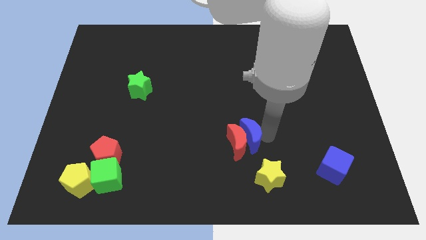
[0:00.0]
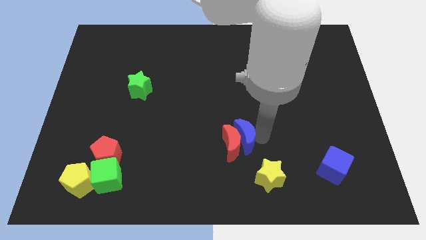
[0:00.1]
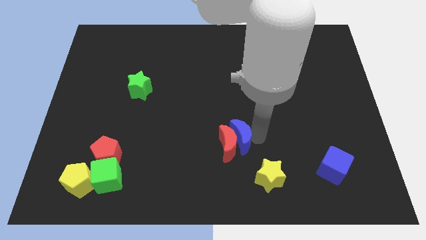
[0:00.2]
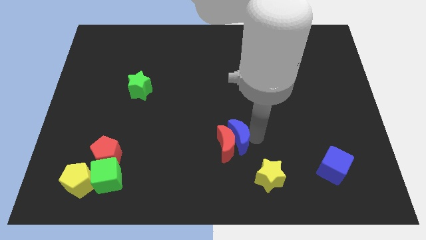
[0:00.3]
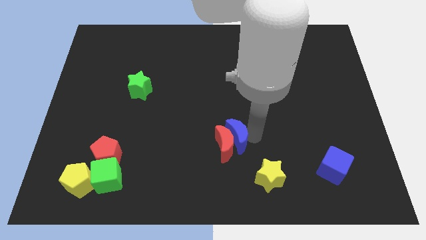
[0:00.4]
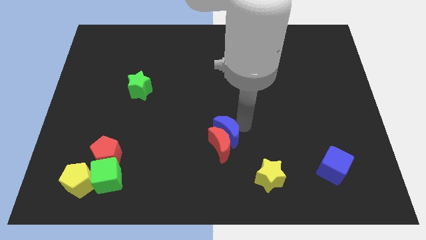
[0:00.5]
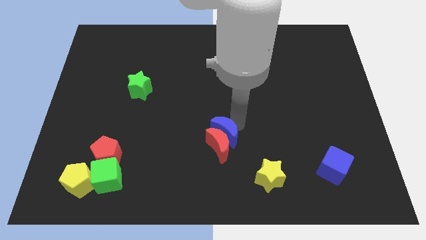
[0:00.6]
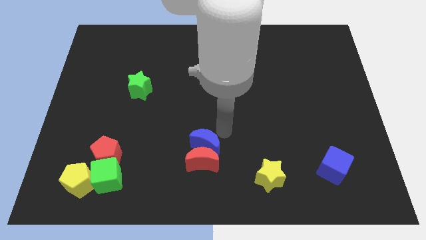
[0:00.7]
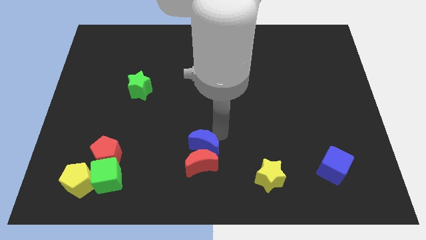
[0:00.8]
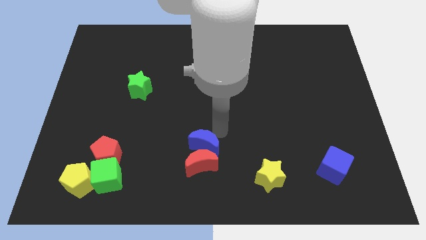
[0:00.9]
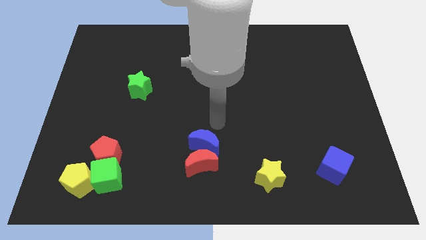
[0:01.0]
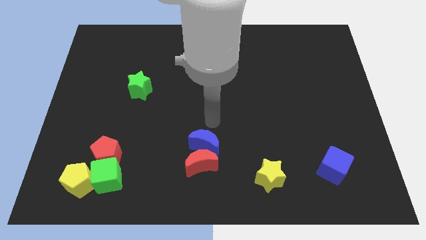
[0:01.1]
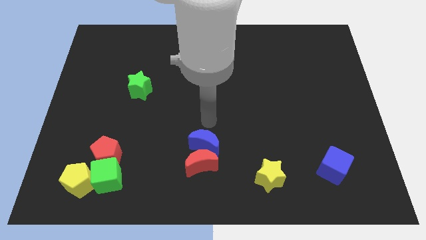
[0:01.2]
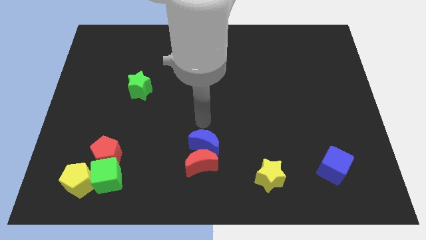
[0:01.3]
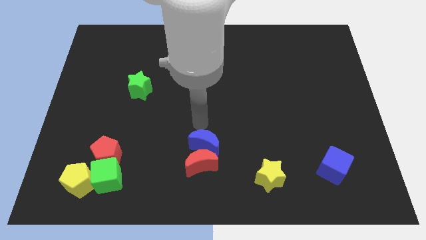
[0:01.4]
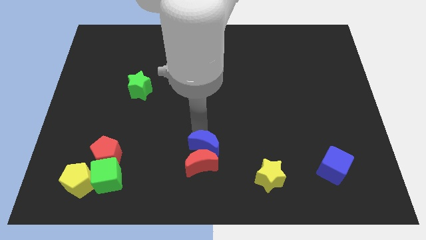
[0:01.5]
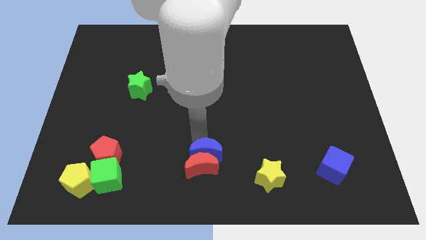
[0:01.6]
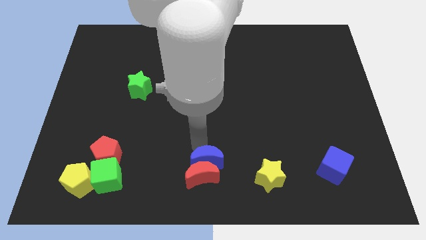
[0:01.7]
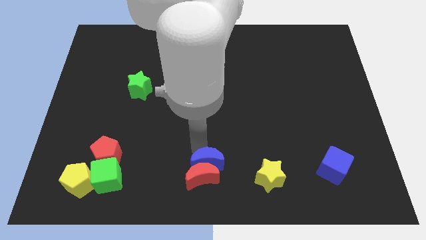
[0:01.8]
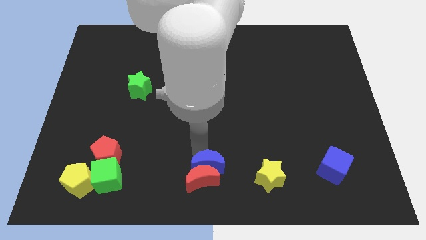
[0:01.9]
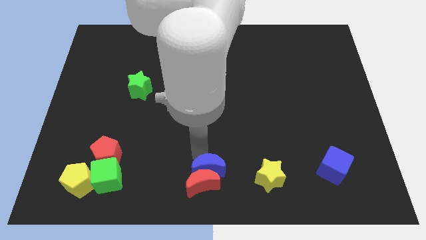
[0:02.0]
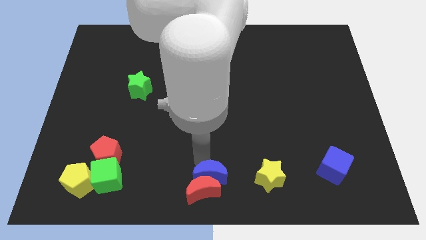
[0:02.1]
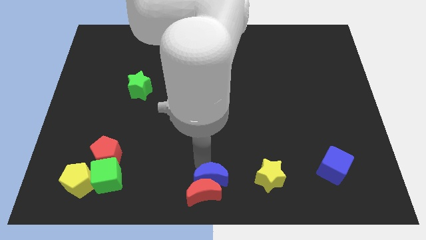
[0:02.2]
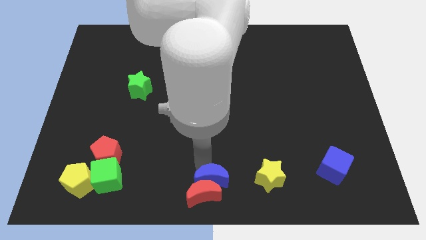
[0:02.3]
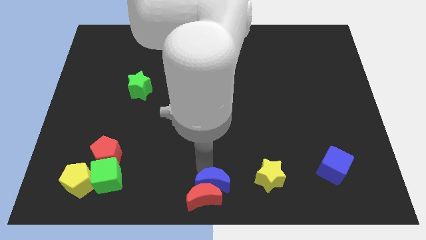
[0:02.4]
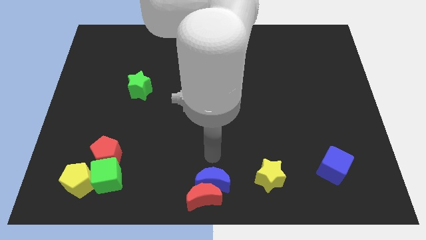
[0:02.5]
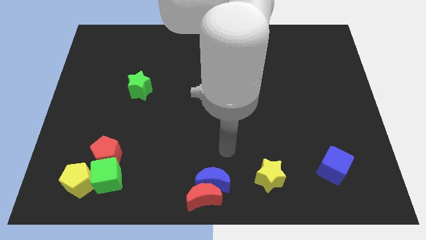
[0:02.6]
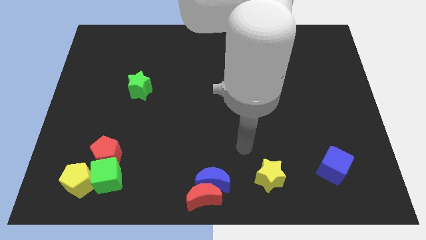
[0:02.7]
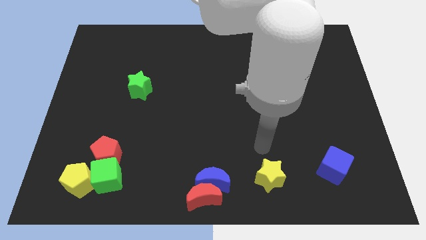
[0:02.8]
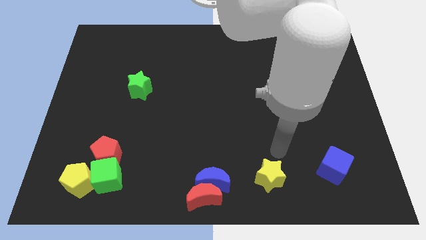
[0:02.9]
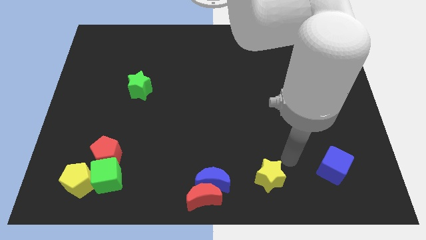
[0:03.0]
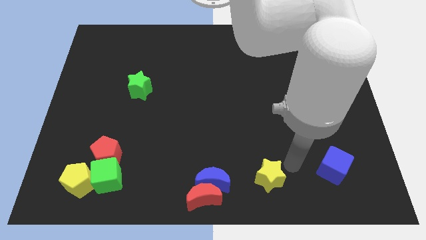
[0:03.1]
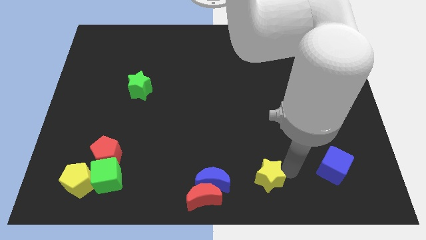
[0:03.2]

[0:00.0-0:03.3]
move the red moon to the bottom center of the board

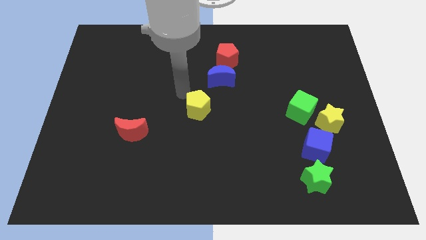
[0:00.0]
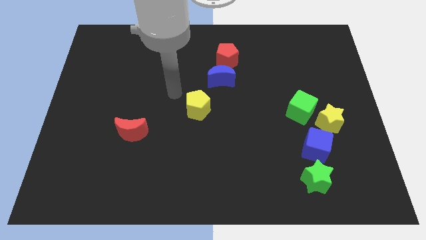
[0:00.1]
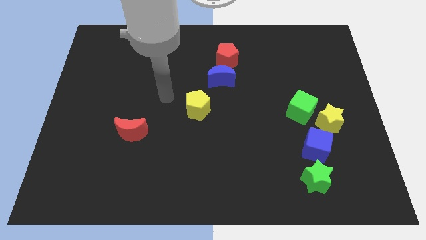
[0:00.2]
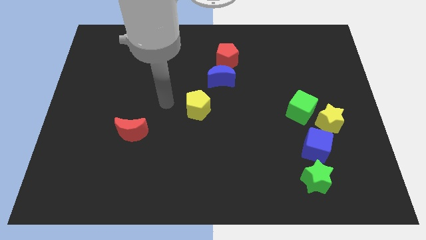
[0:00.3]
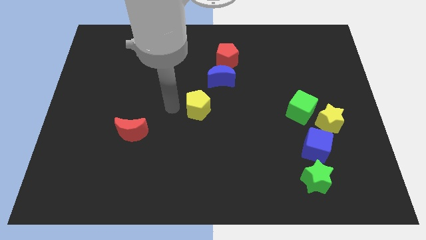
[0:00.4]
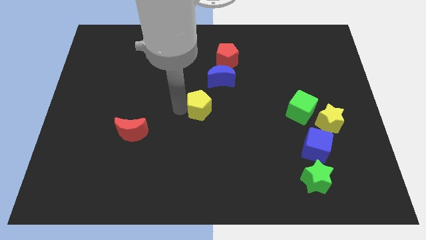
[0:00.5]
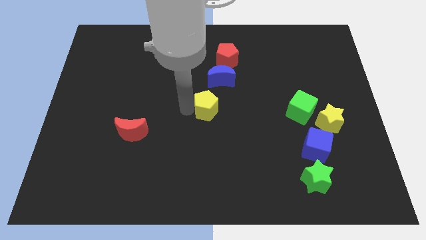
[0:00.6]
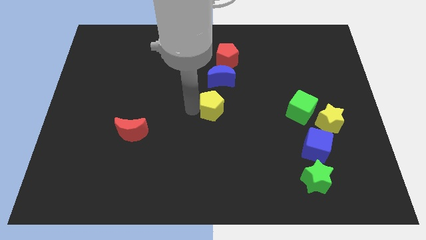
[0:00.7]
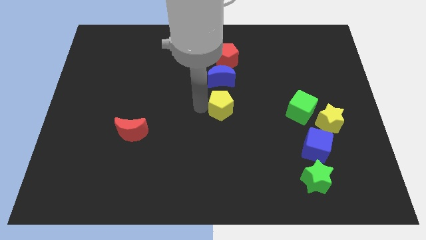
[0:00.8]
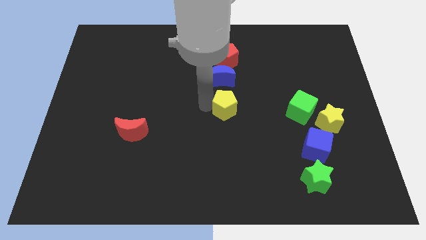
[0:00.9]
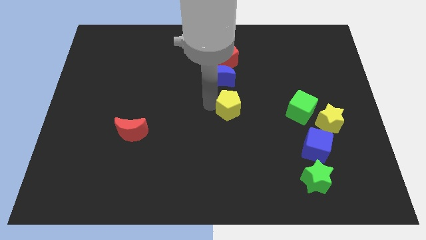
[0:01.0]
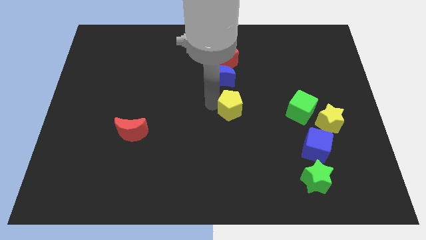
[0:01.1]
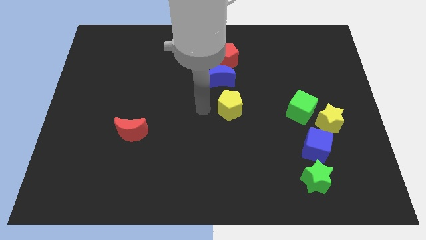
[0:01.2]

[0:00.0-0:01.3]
push the yellow pentagon slightly to the right

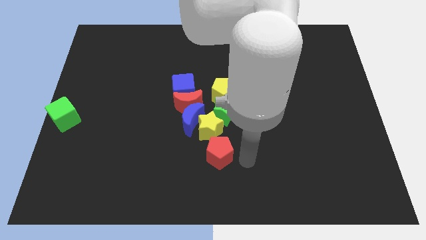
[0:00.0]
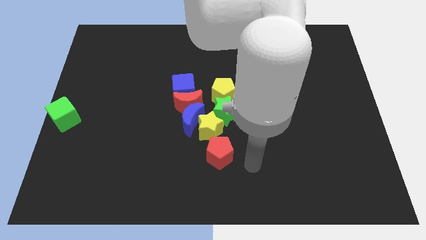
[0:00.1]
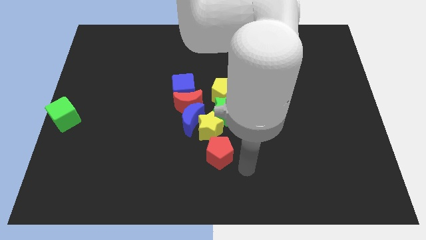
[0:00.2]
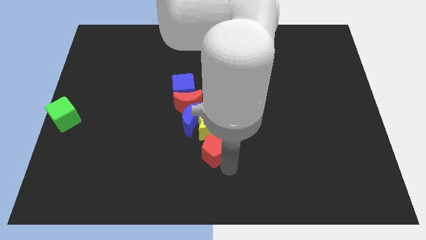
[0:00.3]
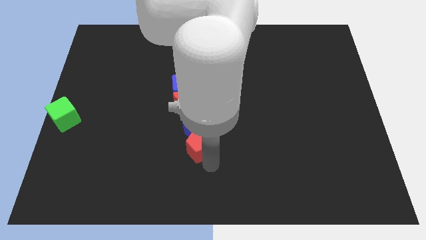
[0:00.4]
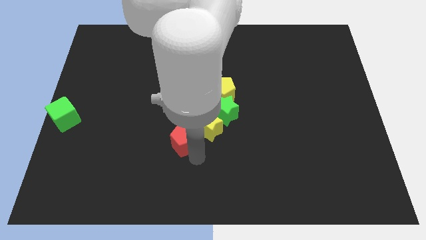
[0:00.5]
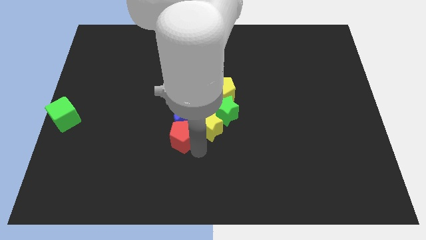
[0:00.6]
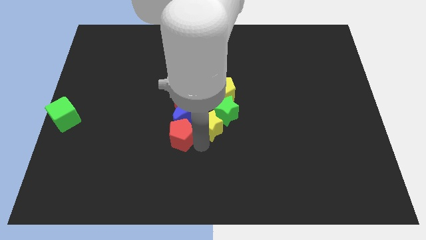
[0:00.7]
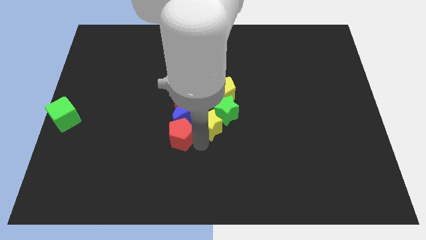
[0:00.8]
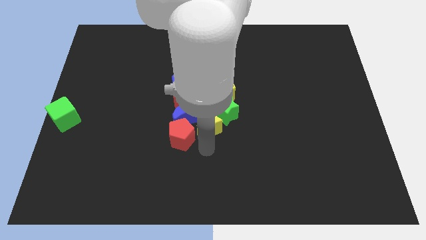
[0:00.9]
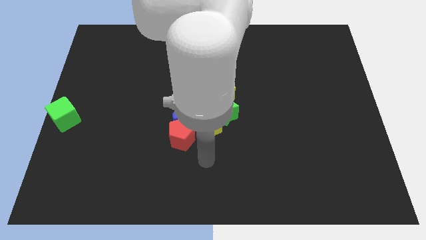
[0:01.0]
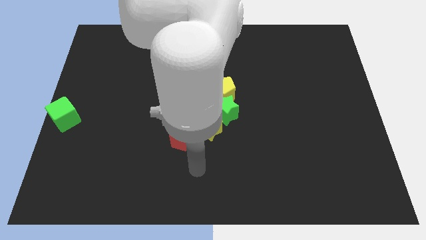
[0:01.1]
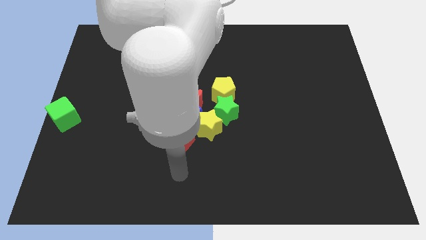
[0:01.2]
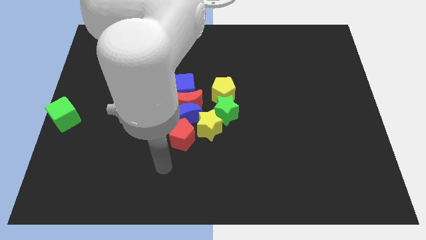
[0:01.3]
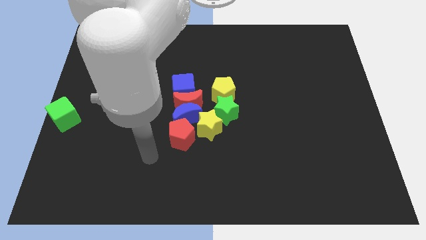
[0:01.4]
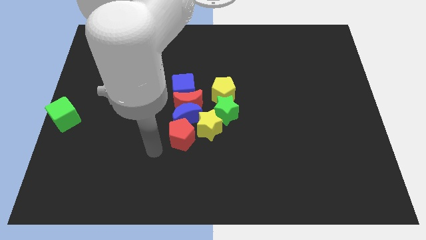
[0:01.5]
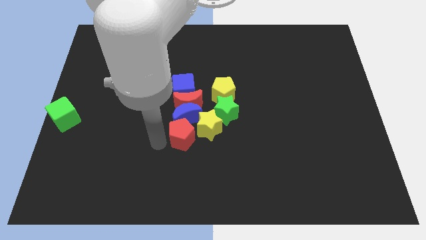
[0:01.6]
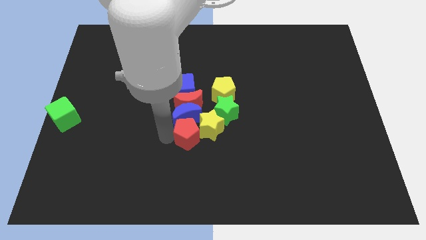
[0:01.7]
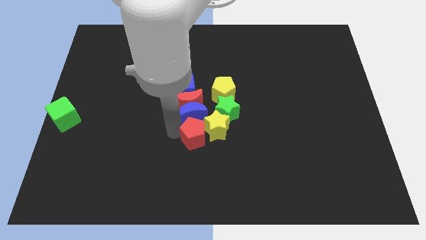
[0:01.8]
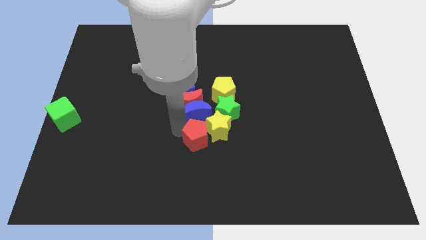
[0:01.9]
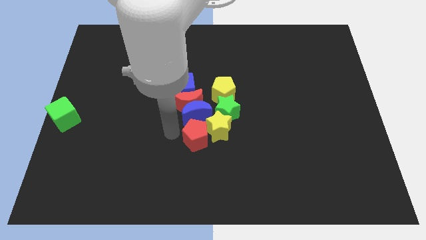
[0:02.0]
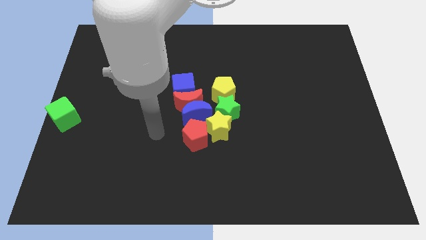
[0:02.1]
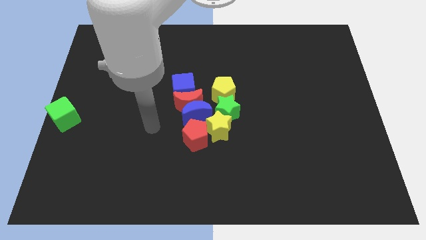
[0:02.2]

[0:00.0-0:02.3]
adjust the red pentagon into the group of blocks

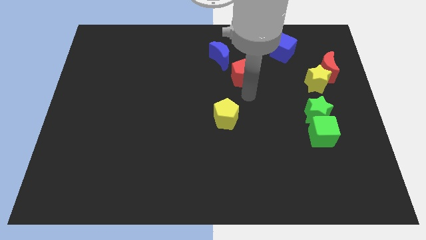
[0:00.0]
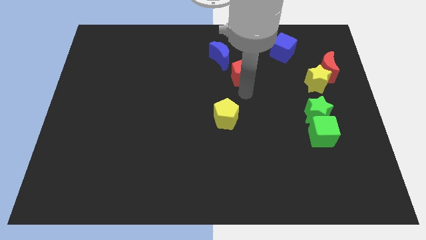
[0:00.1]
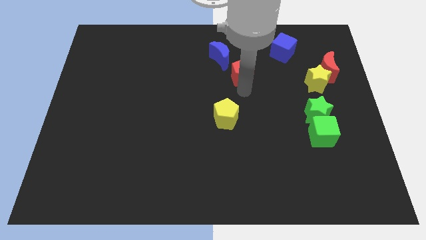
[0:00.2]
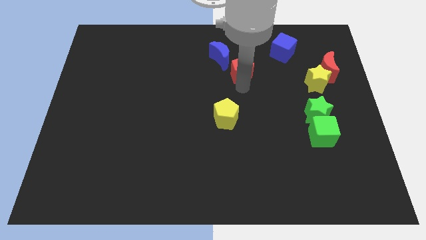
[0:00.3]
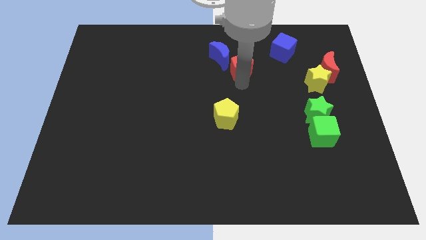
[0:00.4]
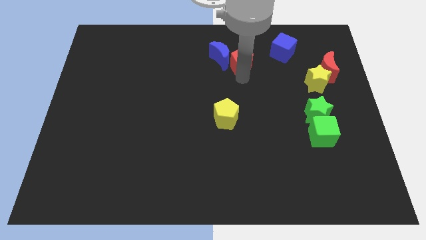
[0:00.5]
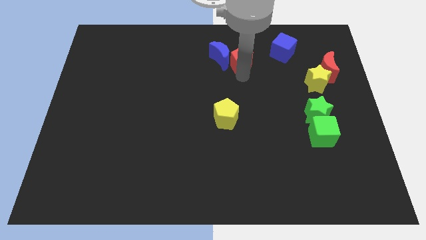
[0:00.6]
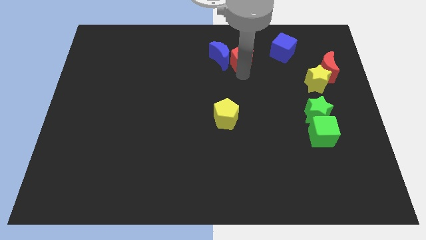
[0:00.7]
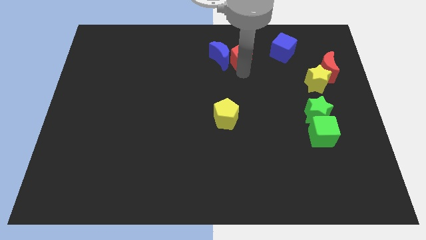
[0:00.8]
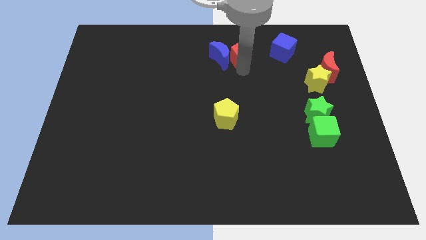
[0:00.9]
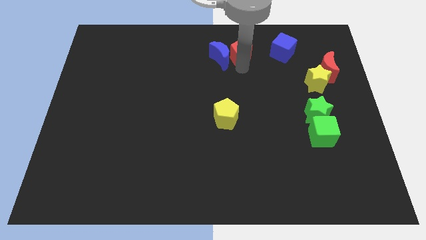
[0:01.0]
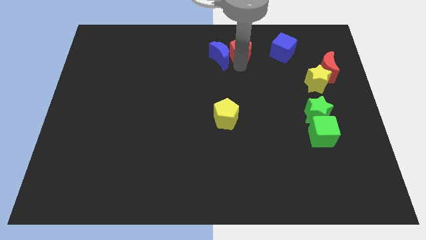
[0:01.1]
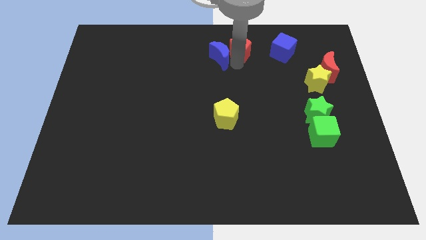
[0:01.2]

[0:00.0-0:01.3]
push the red pentagon to the right of the blue crescent

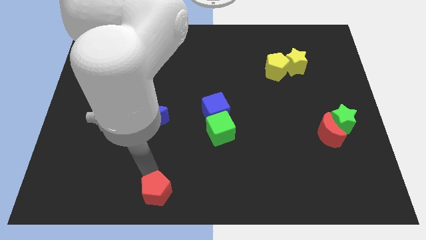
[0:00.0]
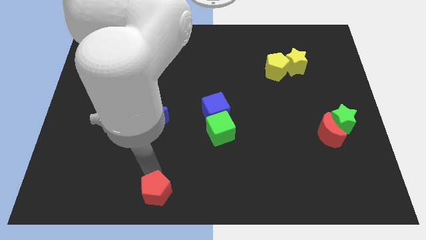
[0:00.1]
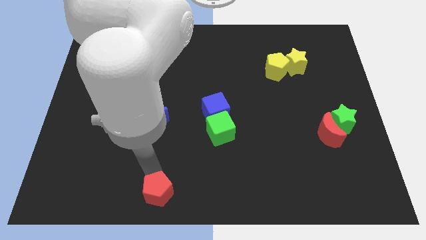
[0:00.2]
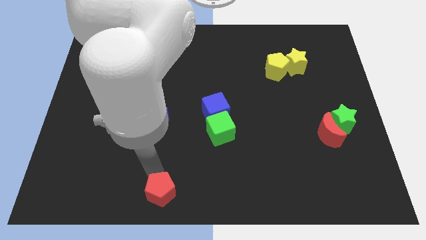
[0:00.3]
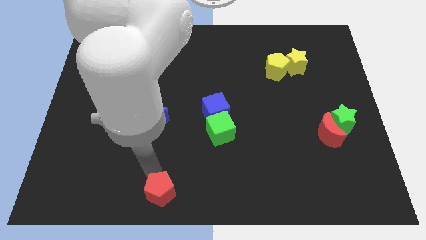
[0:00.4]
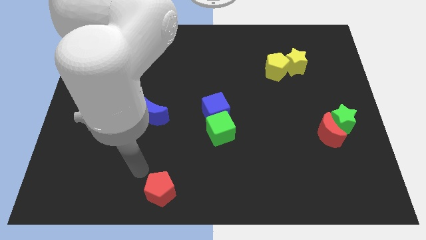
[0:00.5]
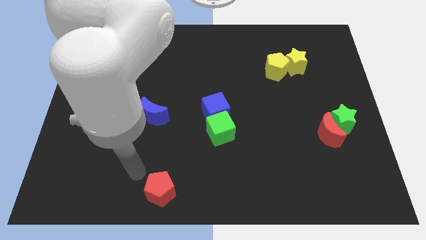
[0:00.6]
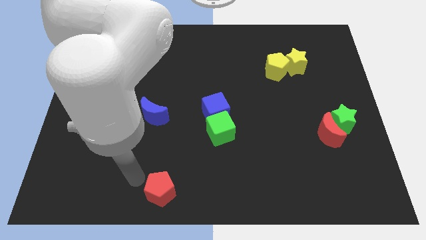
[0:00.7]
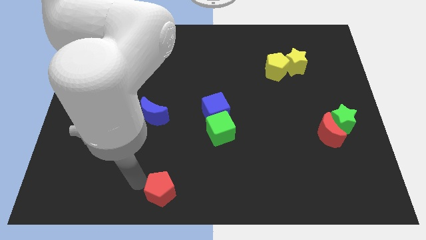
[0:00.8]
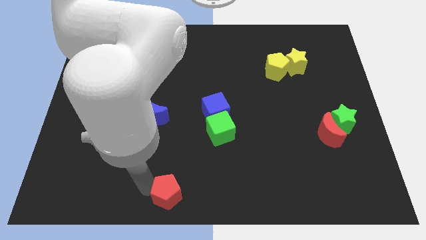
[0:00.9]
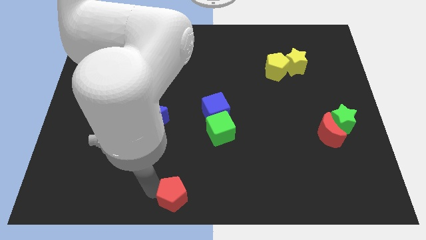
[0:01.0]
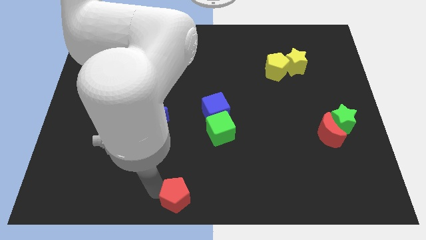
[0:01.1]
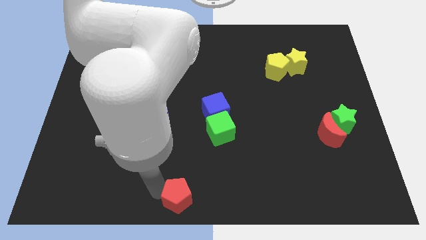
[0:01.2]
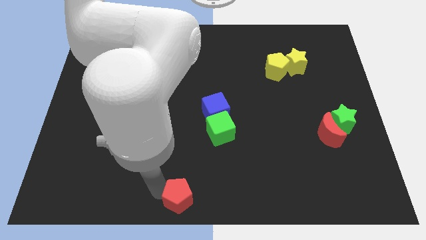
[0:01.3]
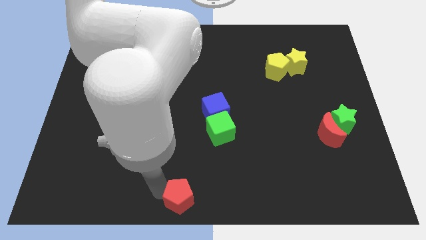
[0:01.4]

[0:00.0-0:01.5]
put the red pentagon at the bottom center of the board
